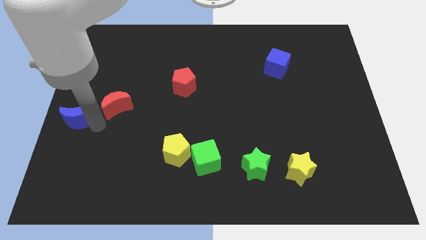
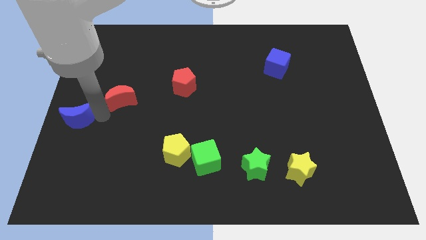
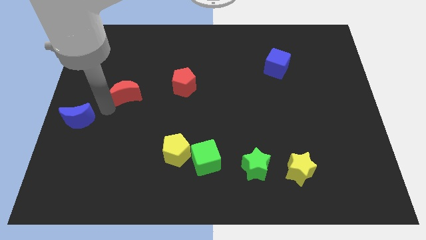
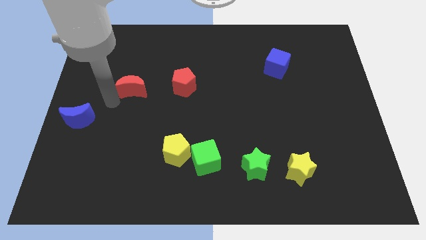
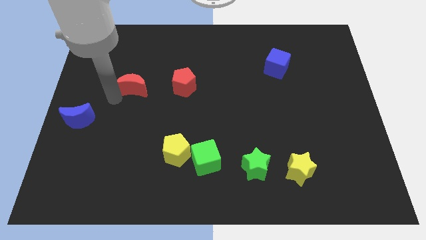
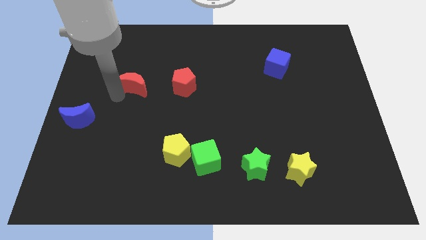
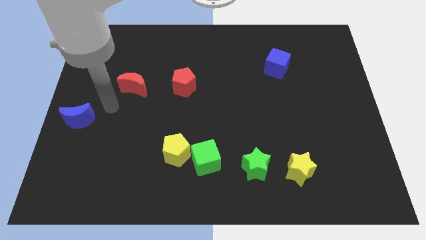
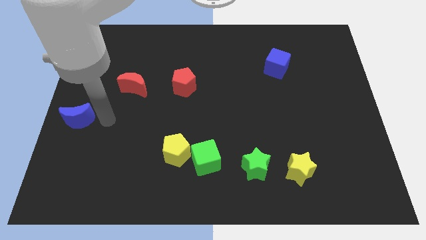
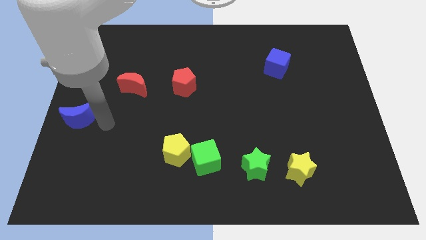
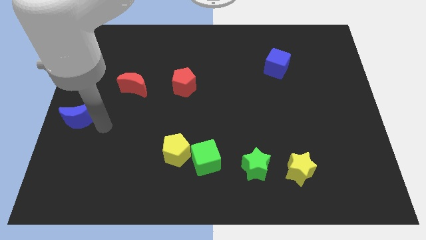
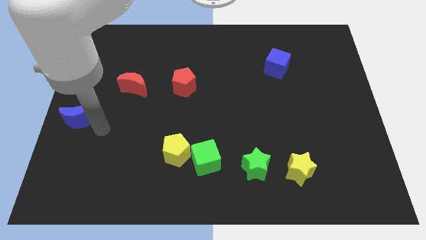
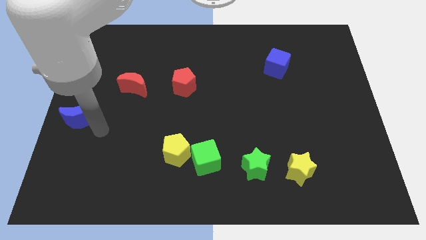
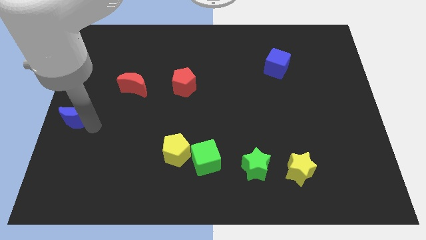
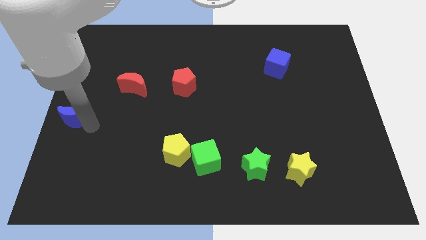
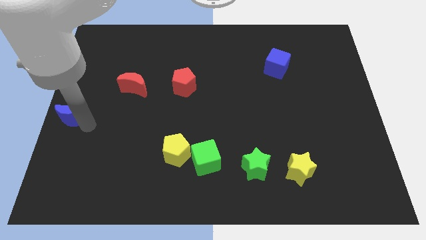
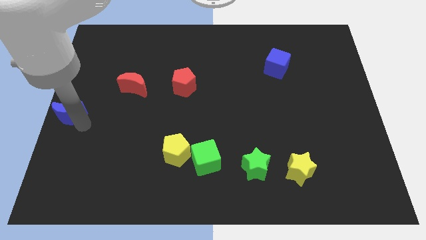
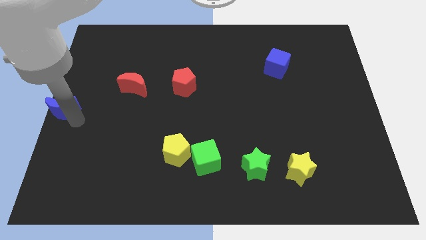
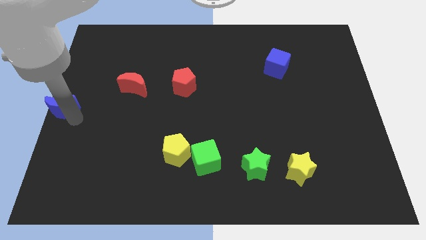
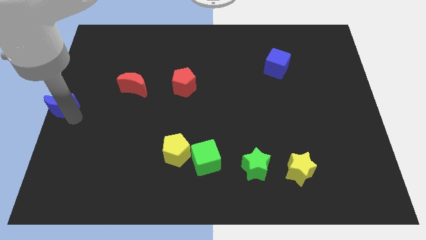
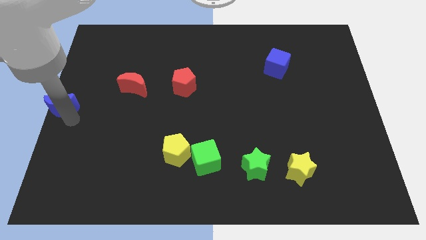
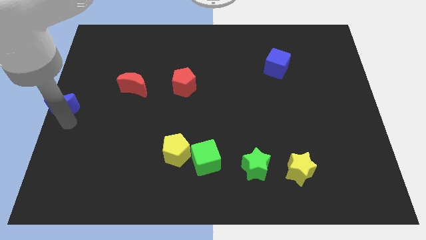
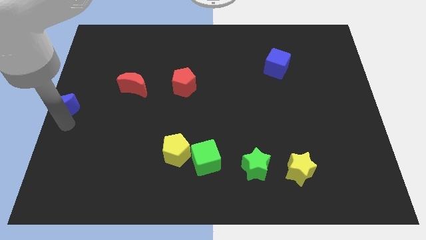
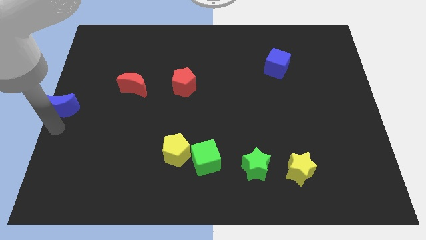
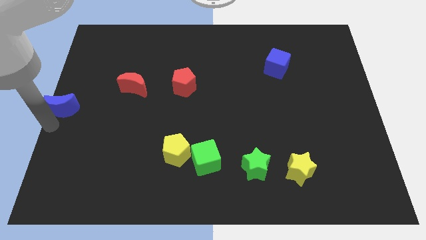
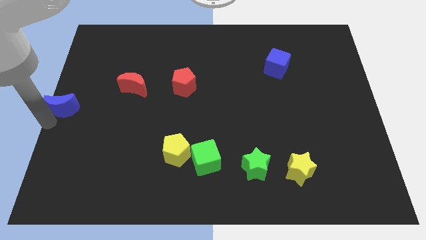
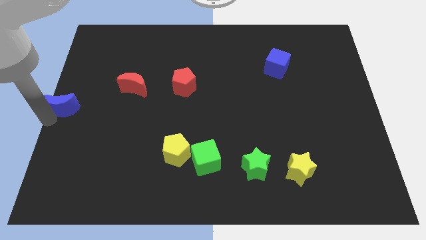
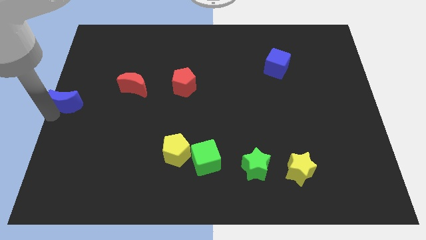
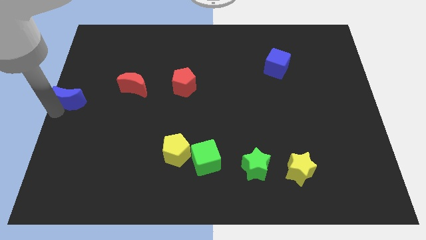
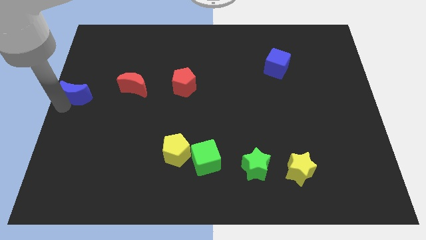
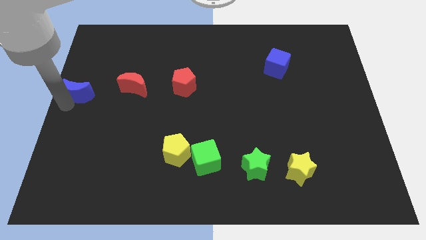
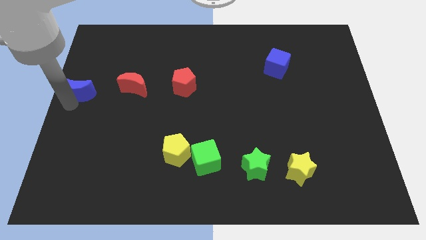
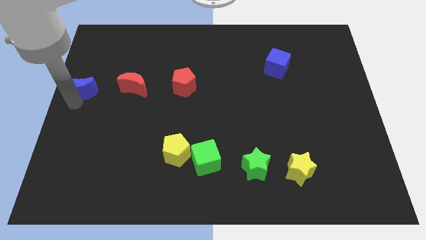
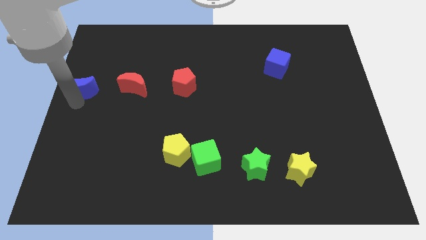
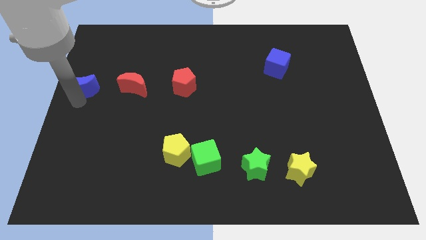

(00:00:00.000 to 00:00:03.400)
move the crescents to the top left of the board

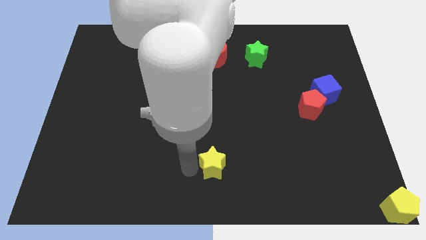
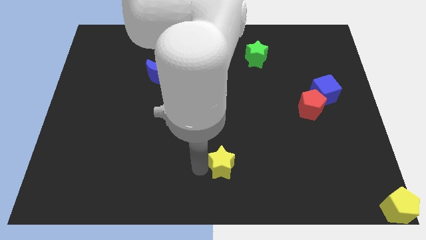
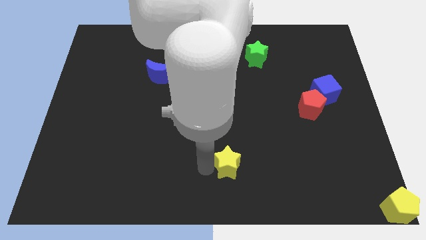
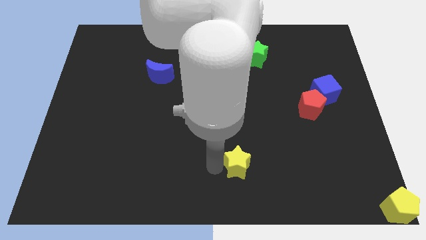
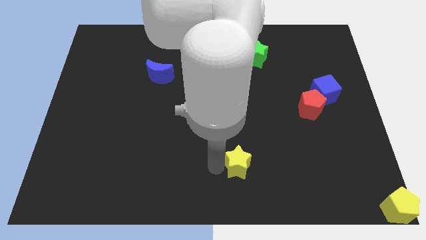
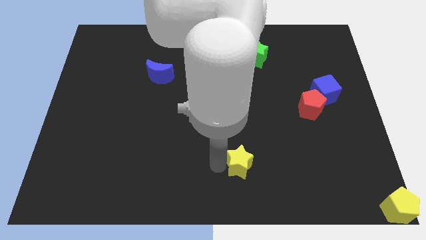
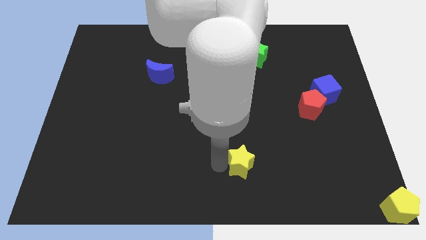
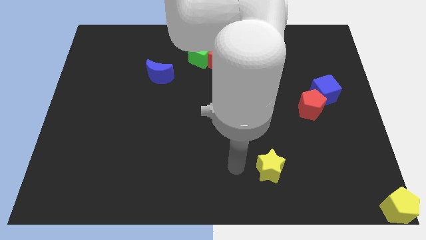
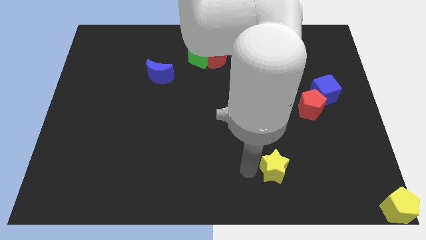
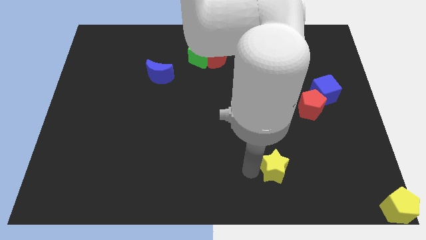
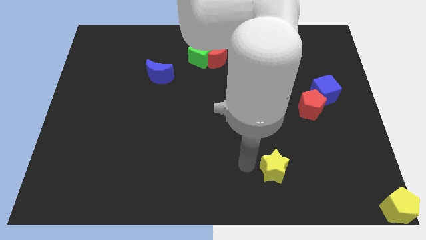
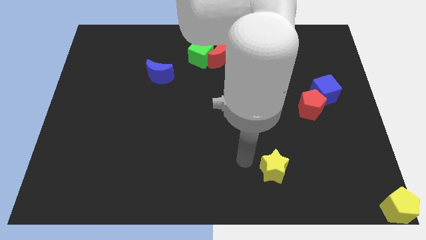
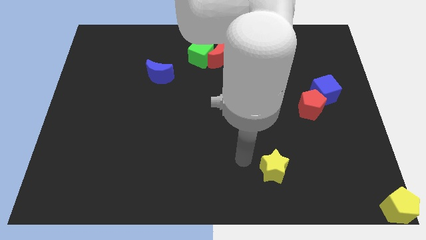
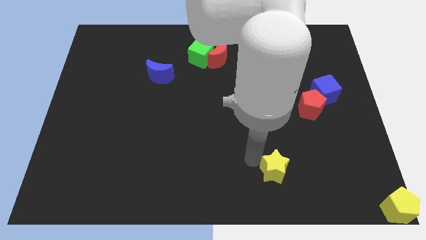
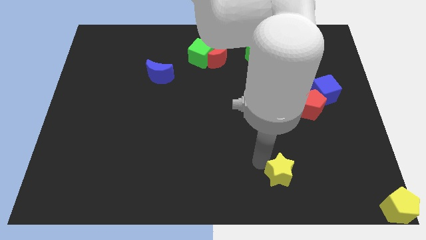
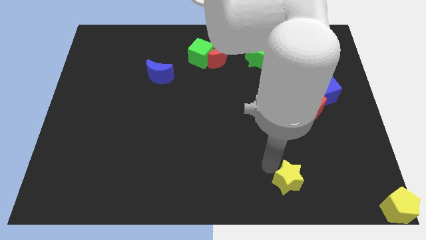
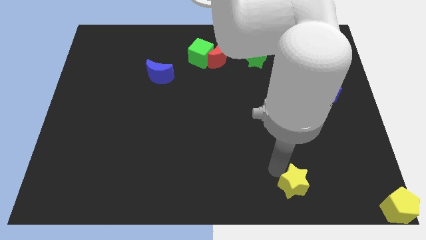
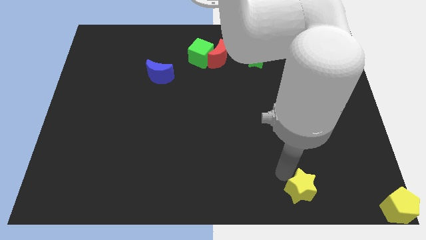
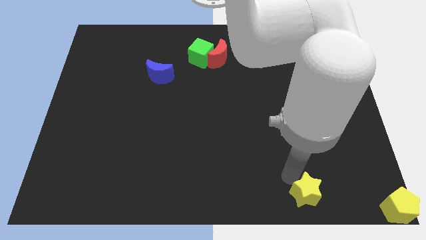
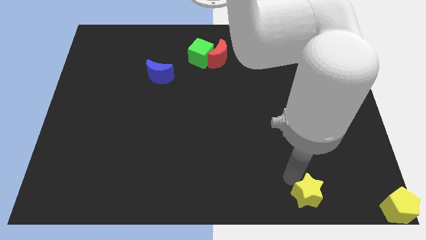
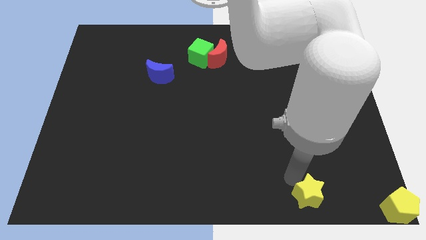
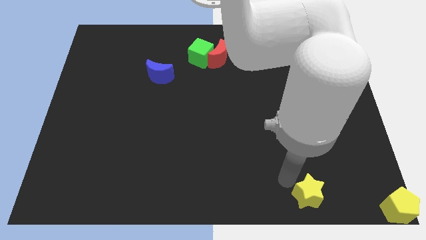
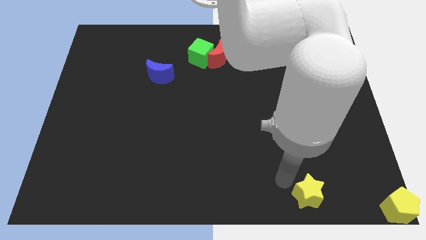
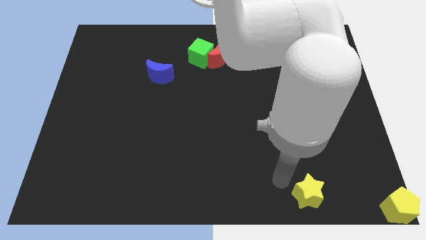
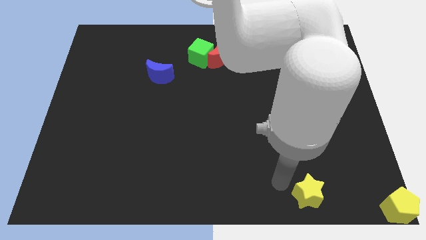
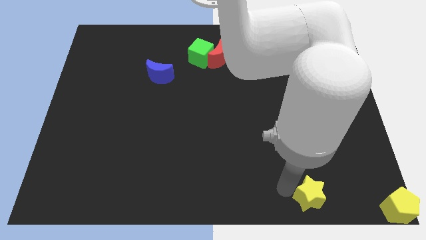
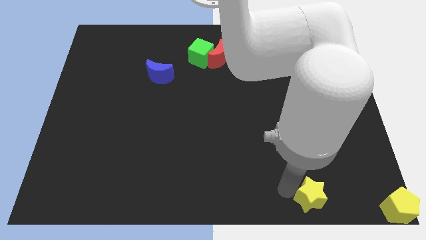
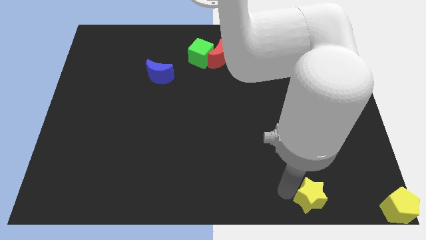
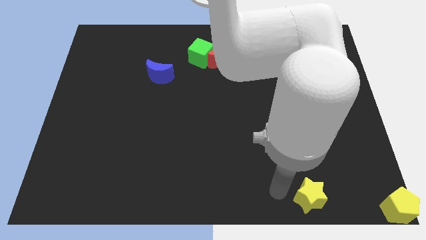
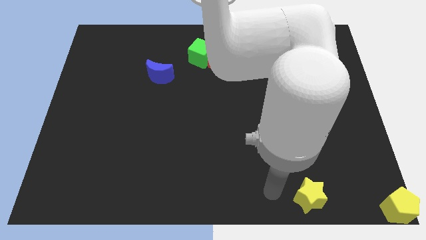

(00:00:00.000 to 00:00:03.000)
place the yellow star diagonal to left to yellow pentagon

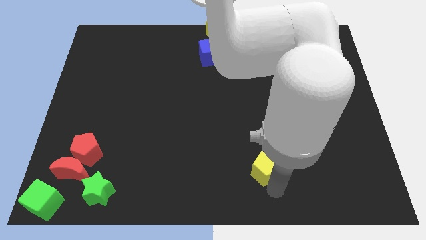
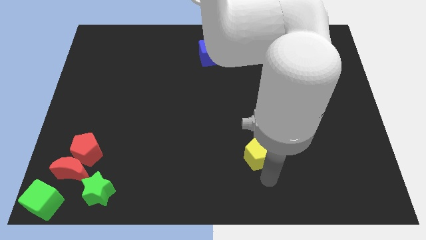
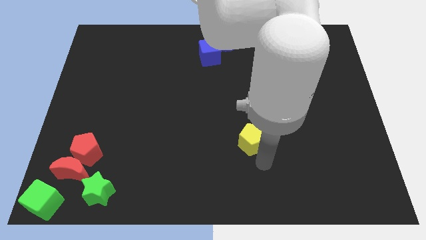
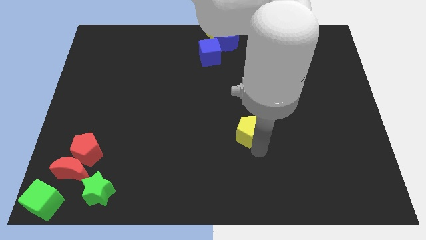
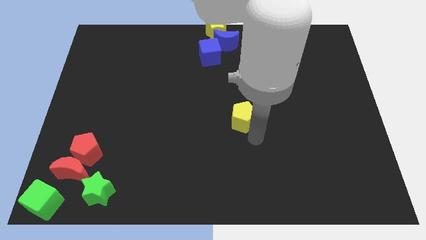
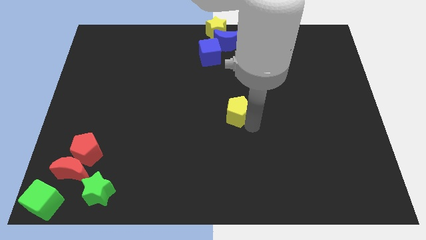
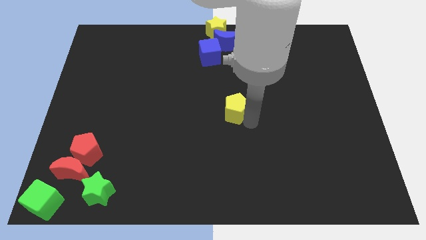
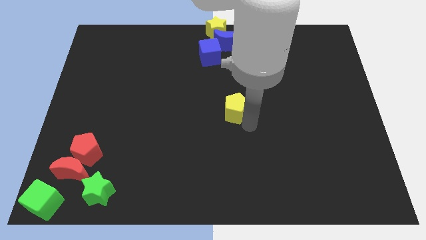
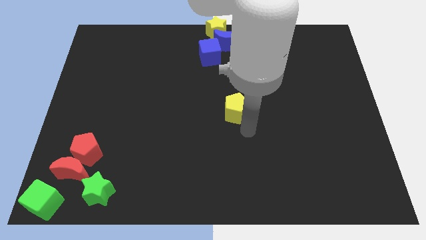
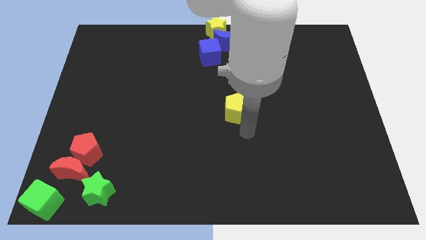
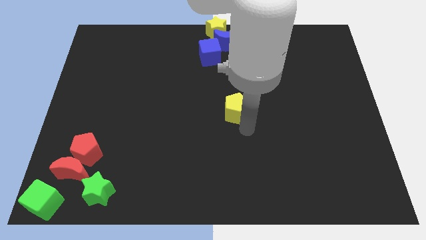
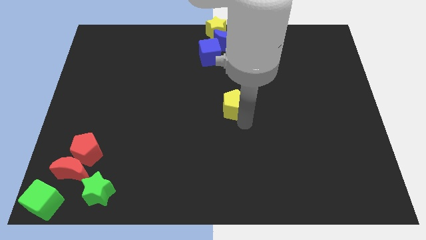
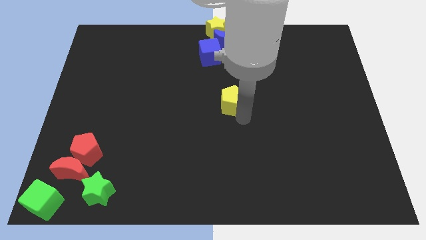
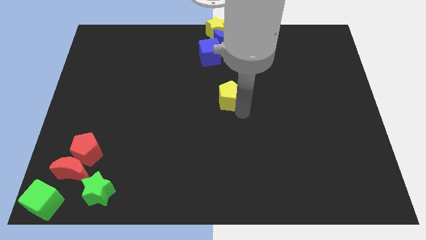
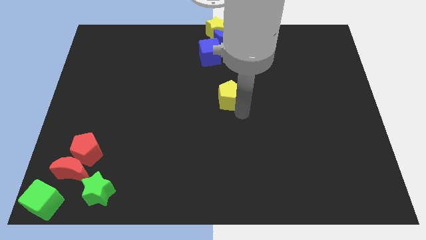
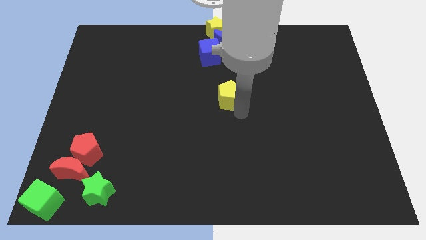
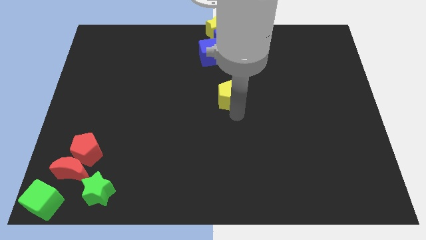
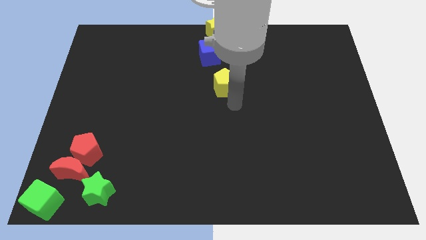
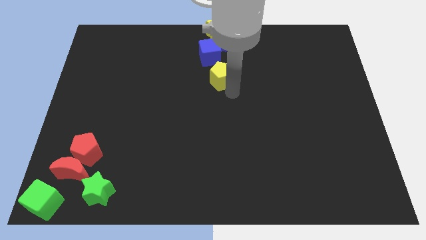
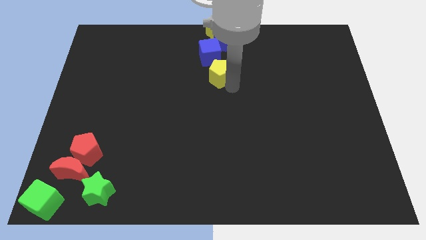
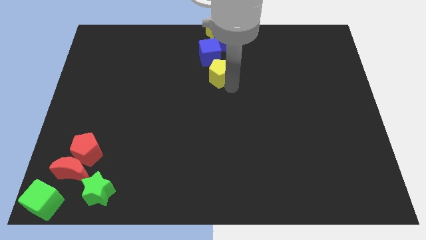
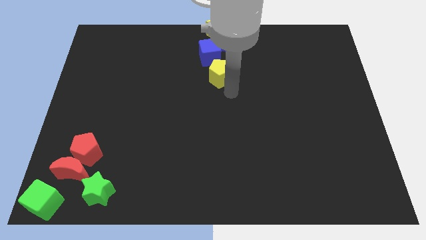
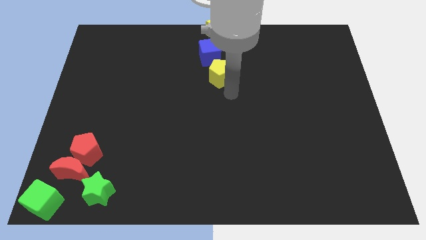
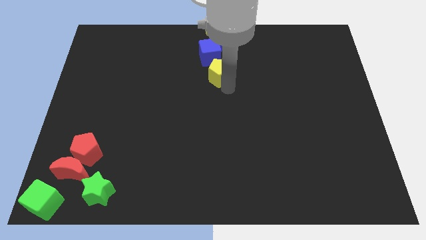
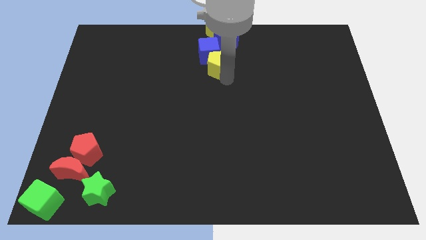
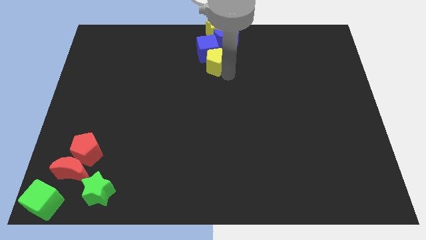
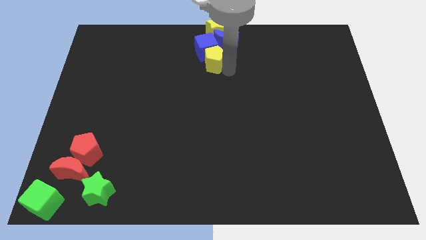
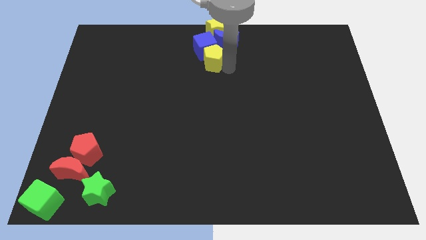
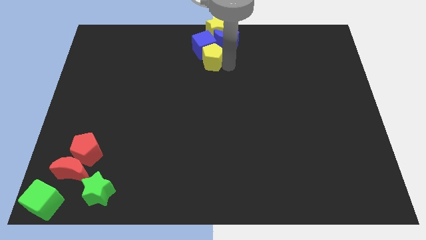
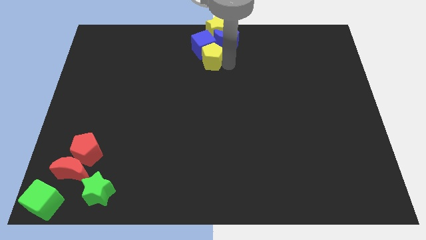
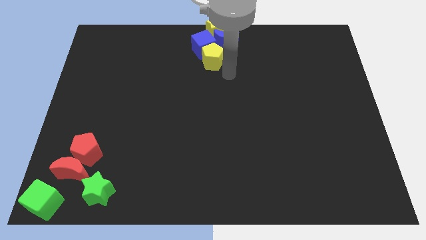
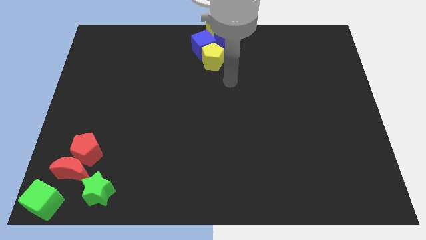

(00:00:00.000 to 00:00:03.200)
push yellow pentagon into the group of blocks at the top
